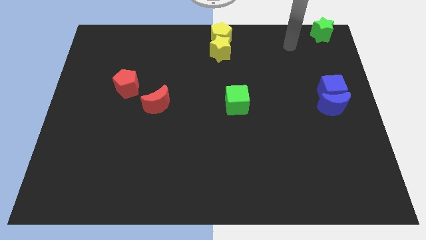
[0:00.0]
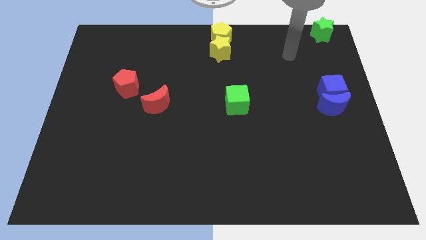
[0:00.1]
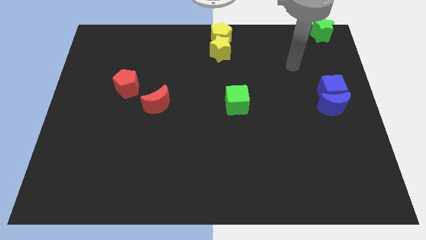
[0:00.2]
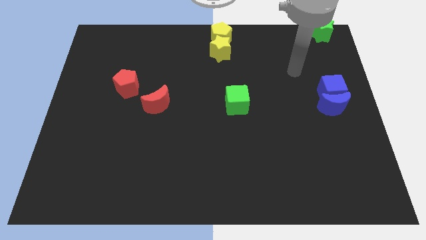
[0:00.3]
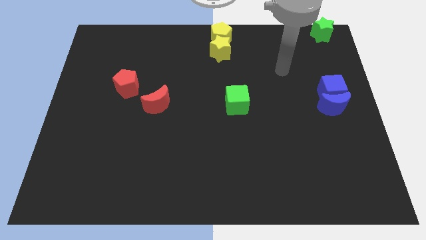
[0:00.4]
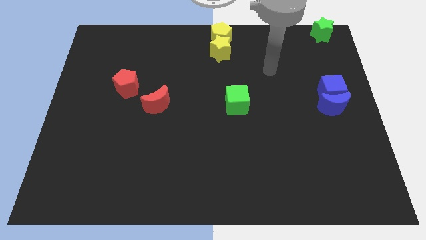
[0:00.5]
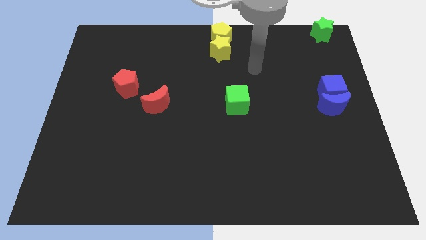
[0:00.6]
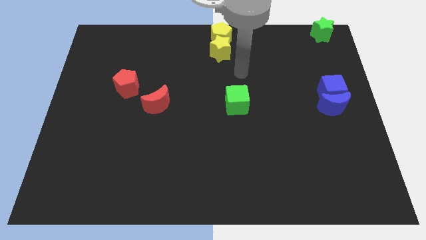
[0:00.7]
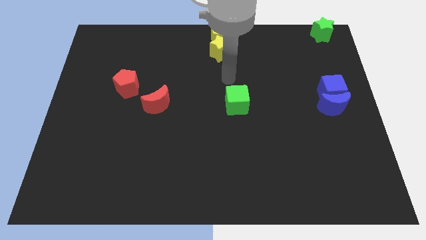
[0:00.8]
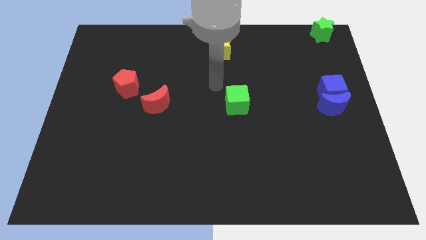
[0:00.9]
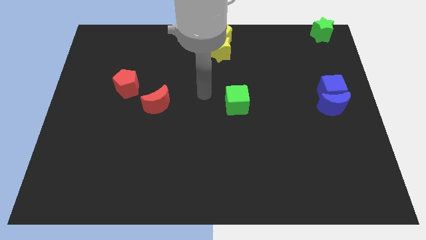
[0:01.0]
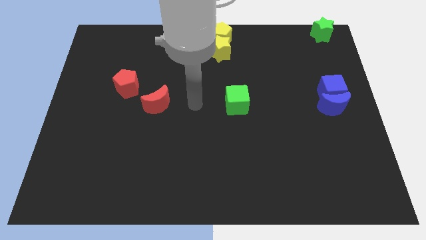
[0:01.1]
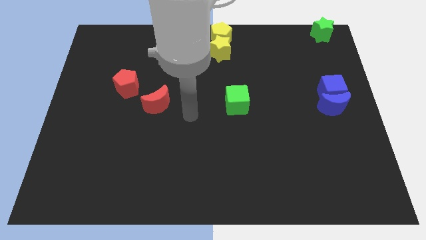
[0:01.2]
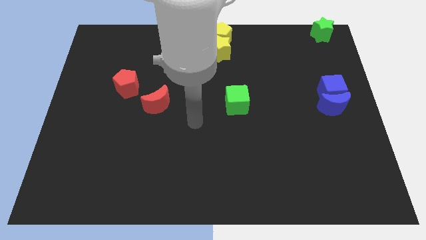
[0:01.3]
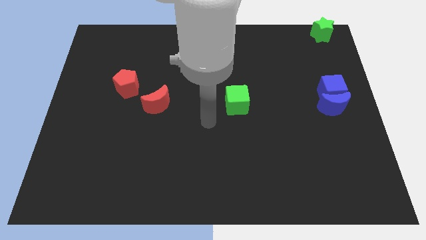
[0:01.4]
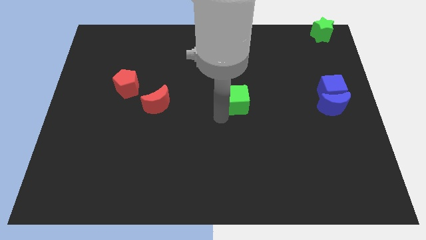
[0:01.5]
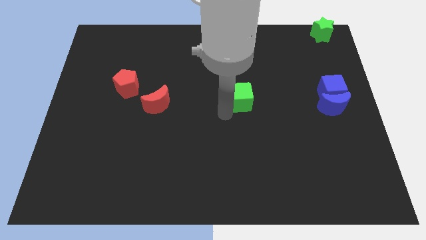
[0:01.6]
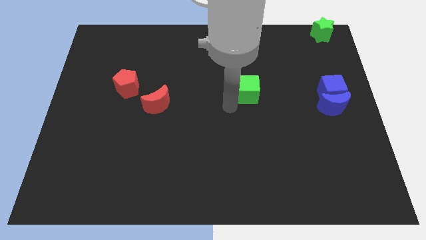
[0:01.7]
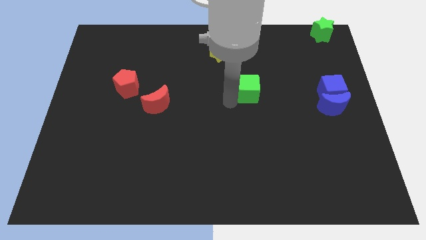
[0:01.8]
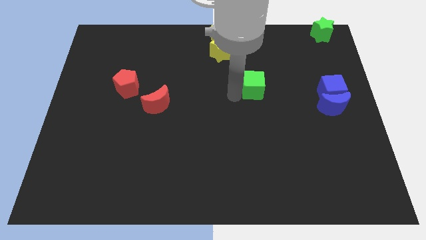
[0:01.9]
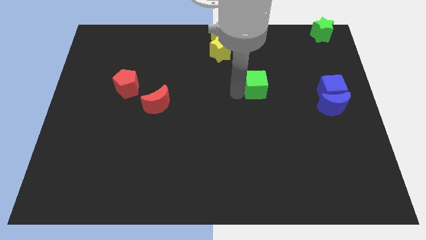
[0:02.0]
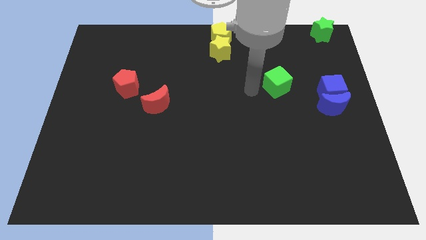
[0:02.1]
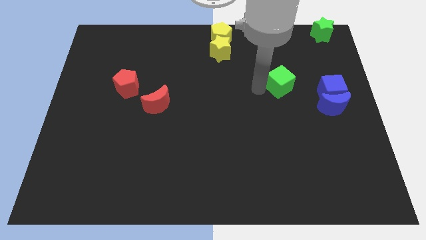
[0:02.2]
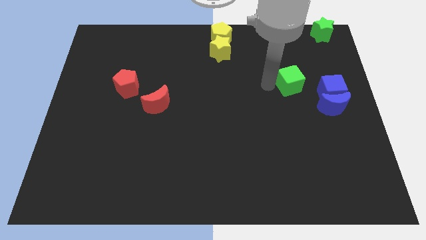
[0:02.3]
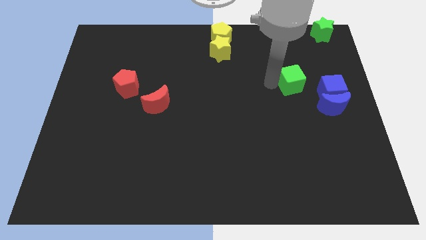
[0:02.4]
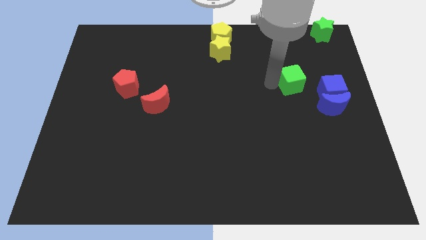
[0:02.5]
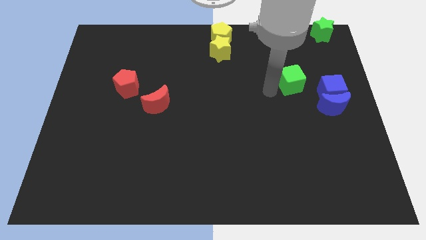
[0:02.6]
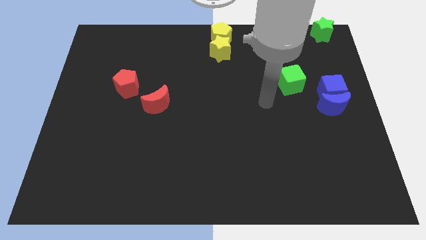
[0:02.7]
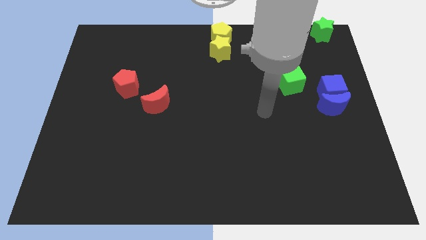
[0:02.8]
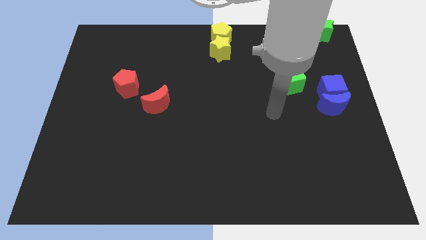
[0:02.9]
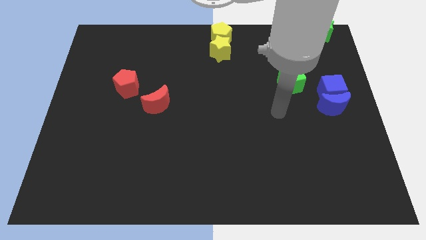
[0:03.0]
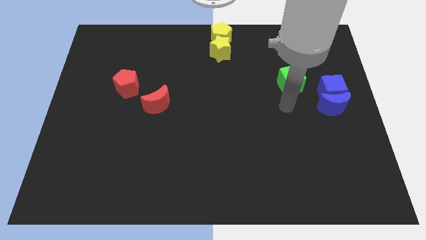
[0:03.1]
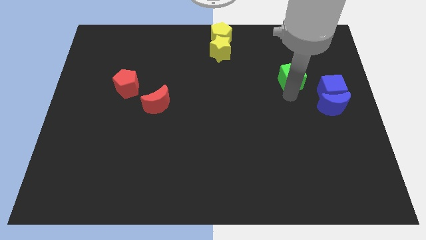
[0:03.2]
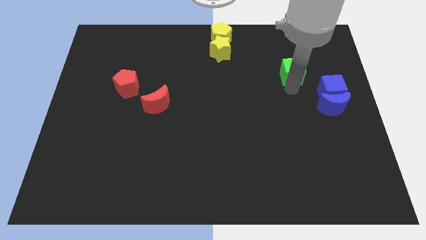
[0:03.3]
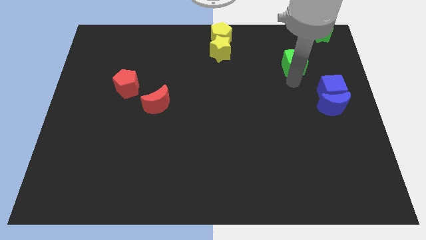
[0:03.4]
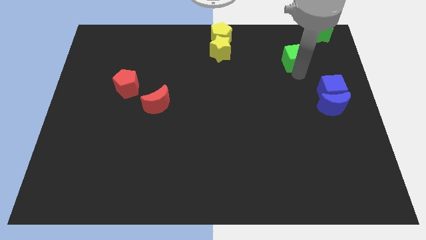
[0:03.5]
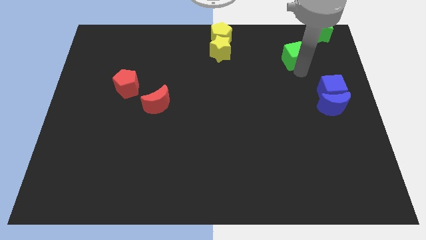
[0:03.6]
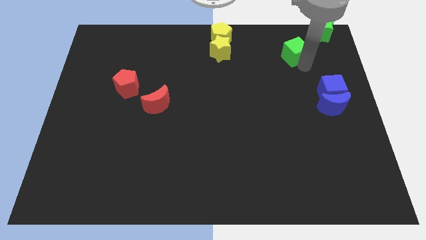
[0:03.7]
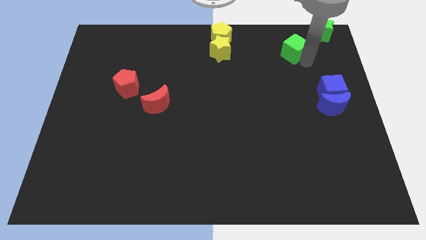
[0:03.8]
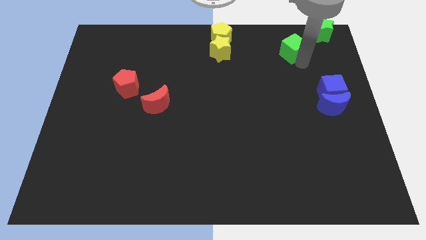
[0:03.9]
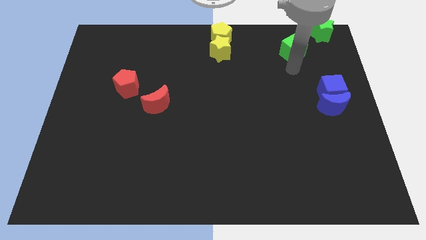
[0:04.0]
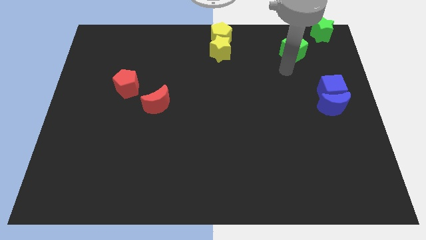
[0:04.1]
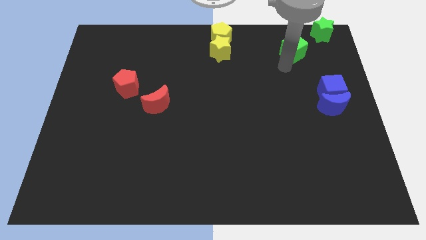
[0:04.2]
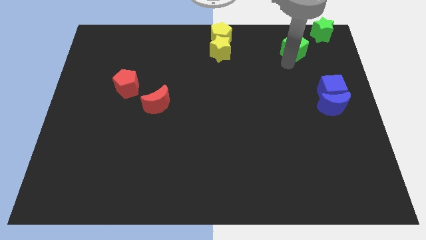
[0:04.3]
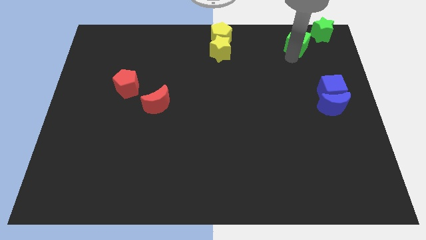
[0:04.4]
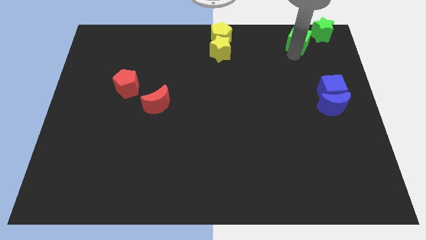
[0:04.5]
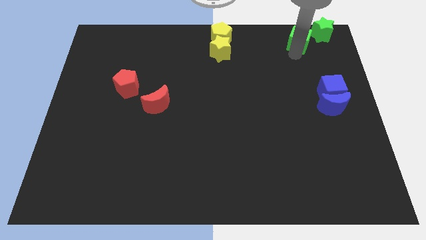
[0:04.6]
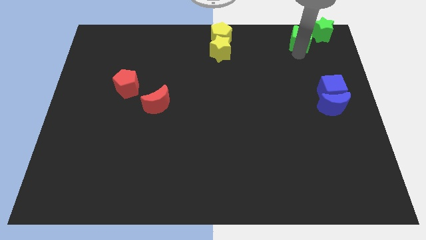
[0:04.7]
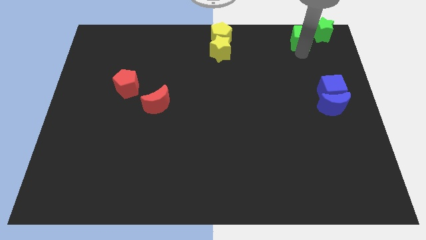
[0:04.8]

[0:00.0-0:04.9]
push the green cube to the left of the green star

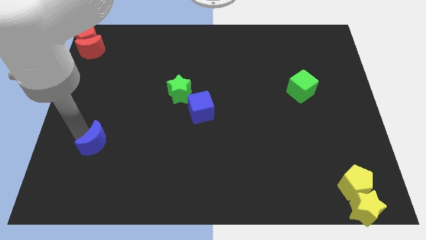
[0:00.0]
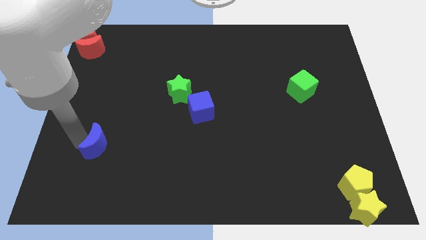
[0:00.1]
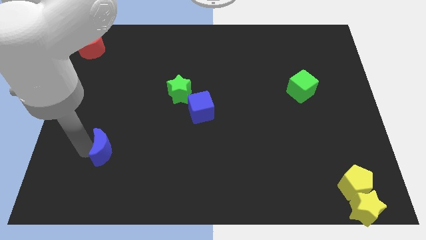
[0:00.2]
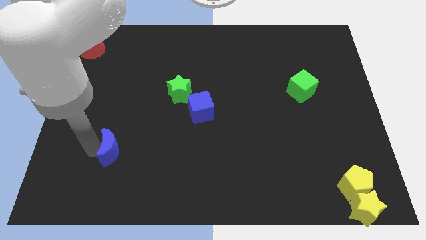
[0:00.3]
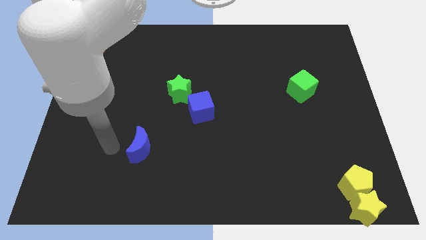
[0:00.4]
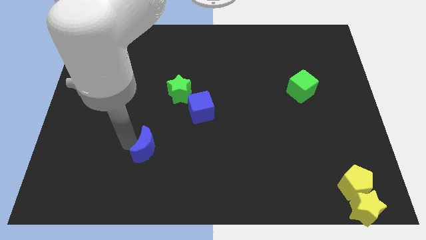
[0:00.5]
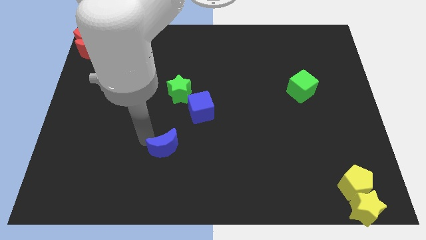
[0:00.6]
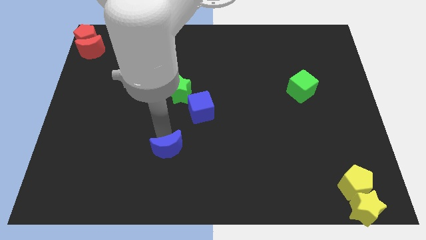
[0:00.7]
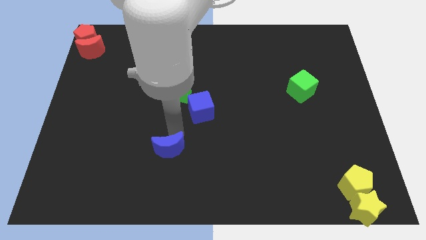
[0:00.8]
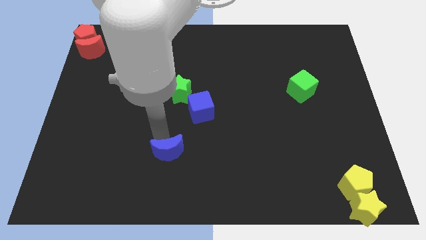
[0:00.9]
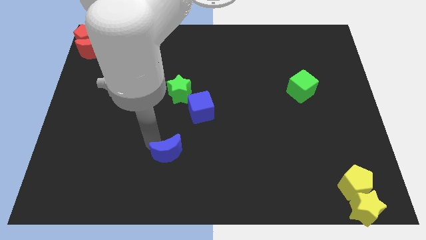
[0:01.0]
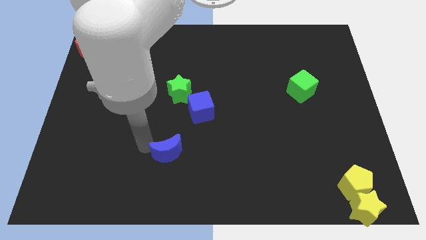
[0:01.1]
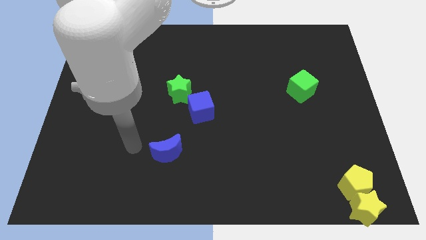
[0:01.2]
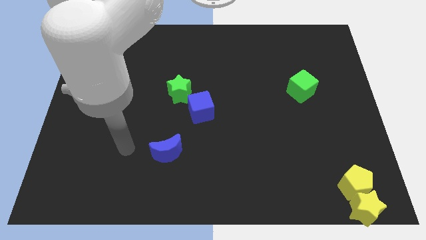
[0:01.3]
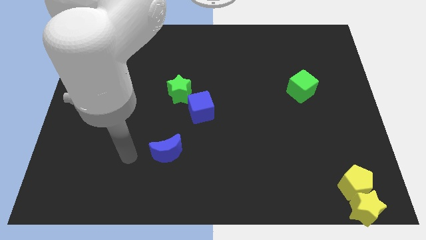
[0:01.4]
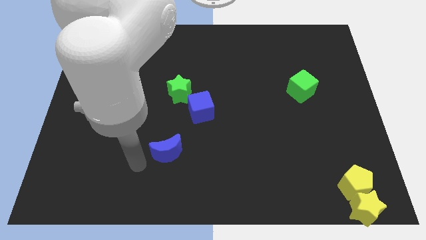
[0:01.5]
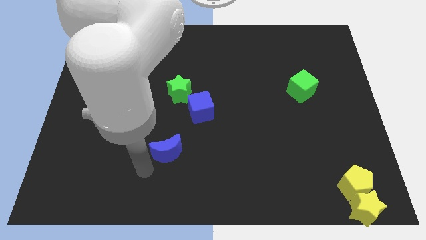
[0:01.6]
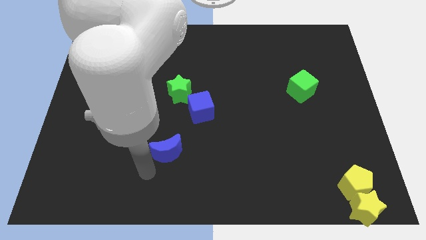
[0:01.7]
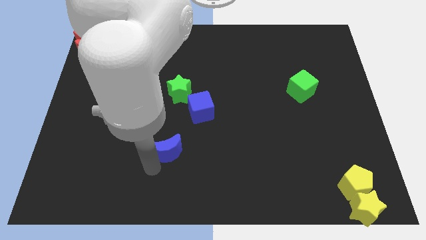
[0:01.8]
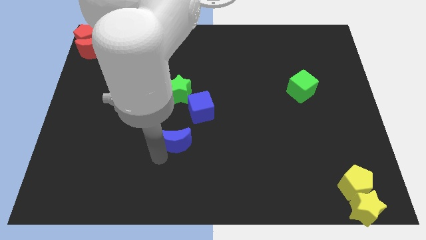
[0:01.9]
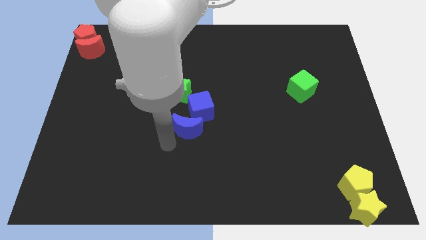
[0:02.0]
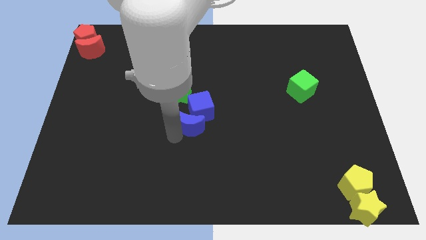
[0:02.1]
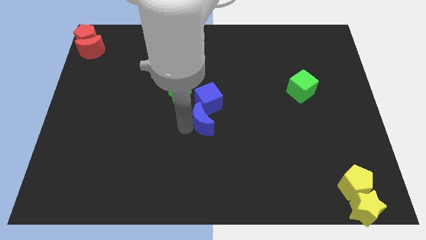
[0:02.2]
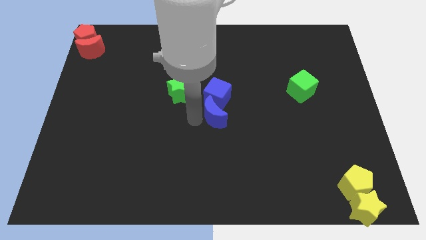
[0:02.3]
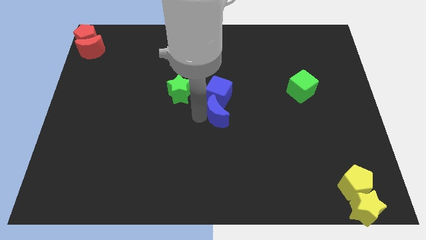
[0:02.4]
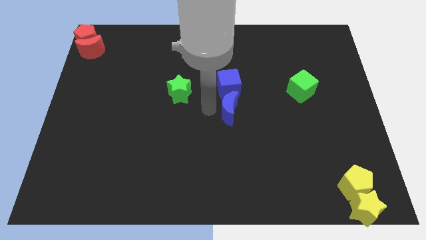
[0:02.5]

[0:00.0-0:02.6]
push the blue crescent into the blue cube

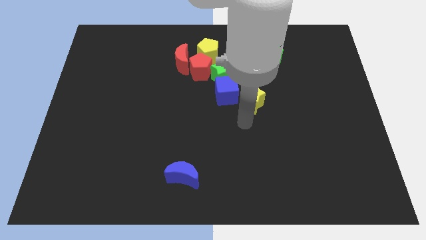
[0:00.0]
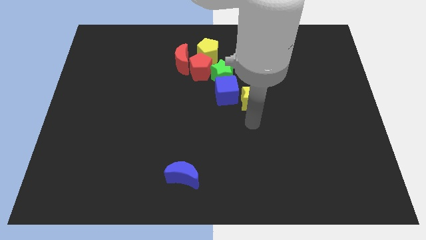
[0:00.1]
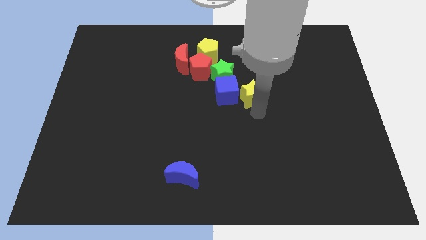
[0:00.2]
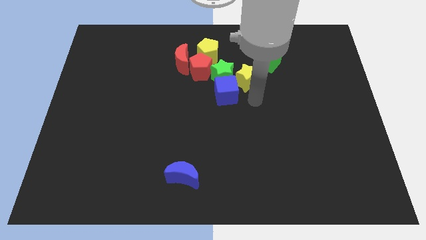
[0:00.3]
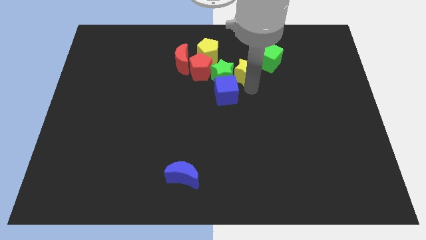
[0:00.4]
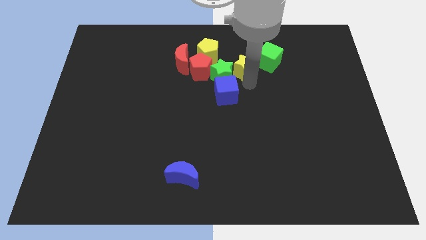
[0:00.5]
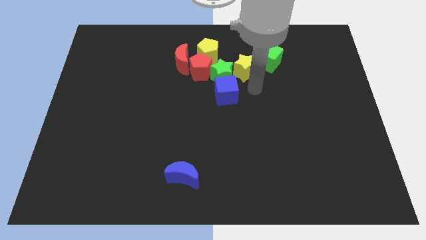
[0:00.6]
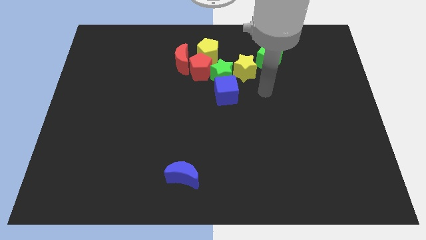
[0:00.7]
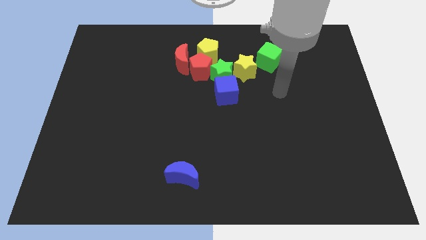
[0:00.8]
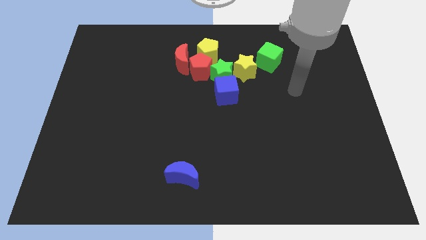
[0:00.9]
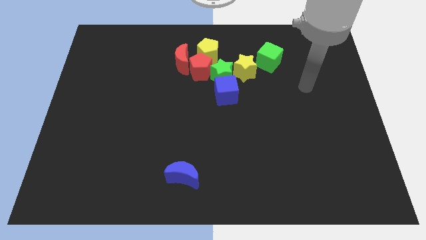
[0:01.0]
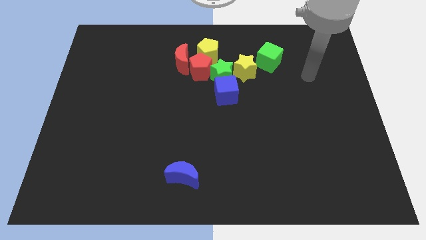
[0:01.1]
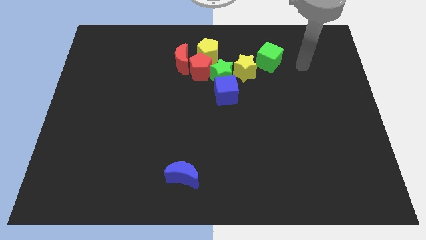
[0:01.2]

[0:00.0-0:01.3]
move the yellow star to the right of the green star

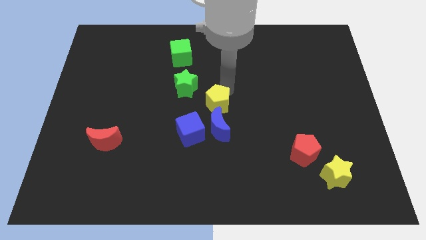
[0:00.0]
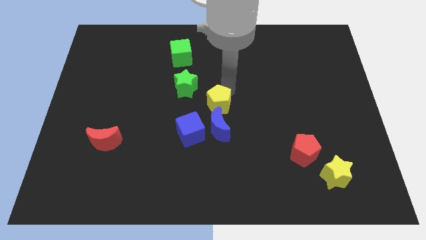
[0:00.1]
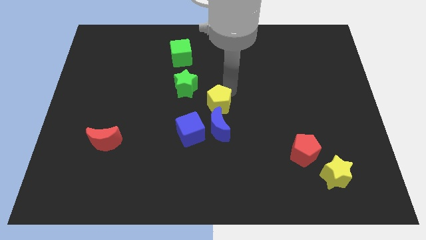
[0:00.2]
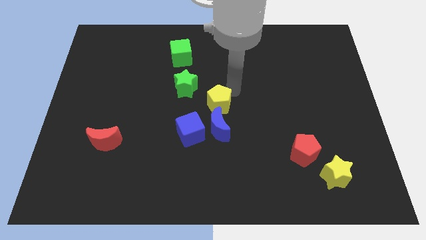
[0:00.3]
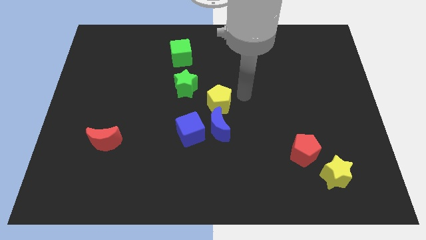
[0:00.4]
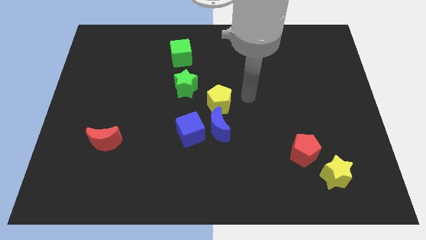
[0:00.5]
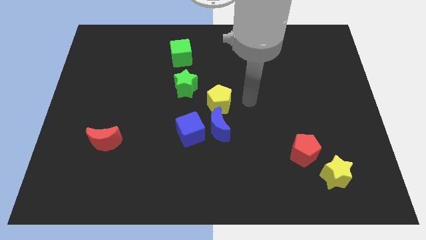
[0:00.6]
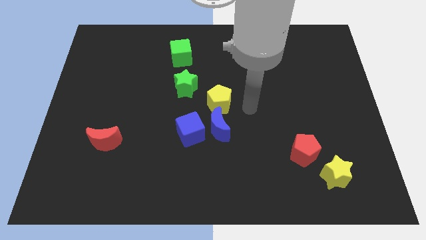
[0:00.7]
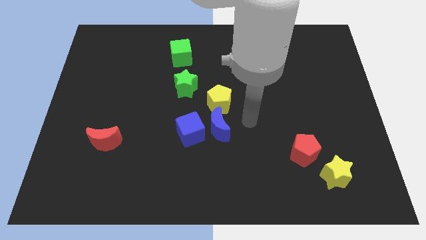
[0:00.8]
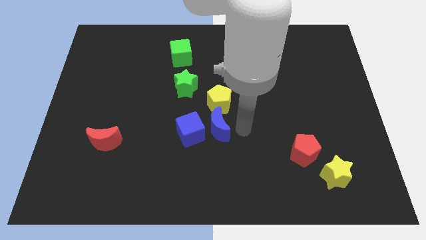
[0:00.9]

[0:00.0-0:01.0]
slightly push the yellow pentagon above the blue crescent
